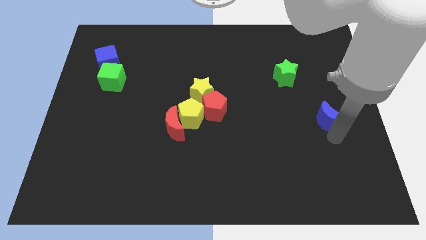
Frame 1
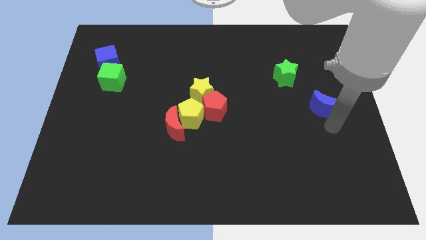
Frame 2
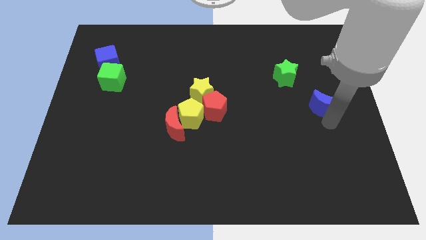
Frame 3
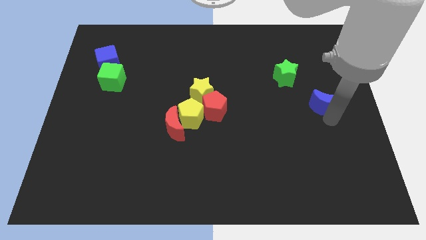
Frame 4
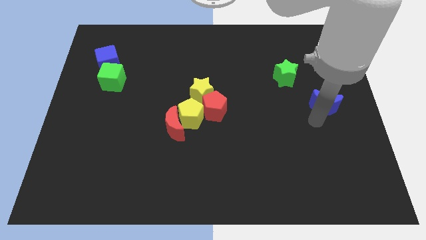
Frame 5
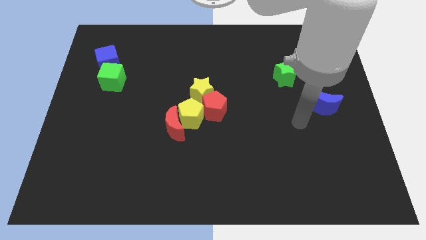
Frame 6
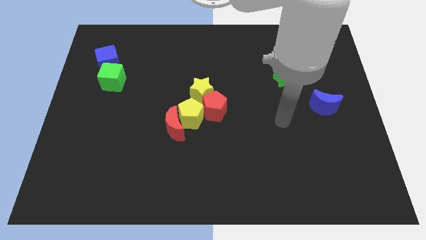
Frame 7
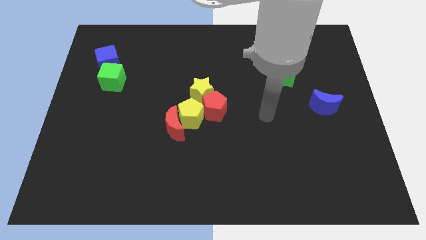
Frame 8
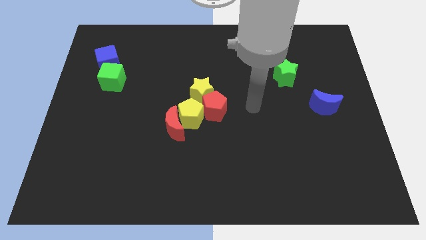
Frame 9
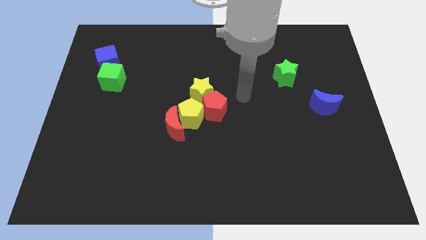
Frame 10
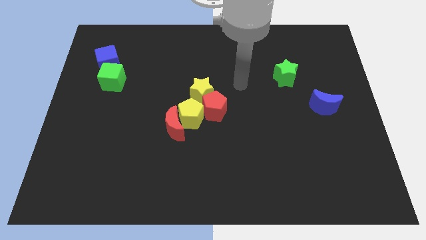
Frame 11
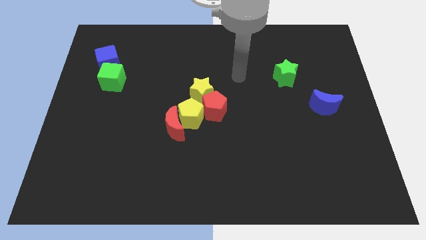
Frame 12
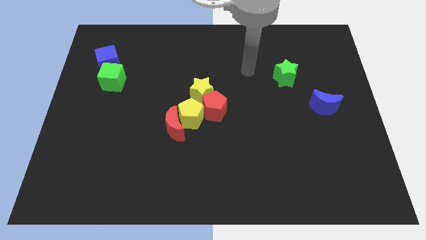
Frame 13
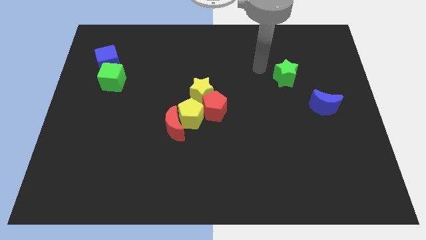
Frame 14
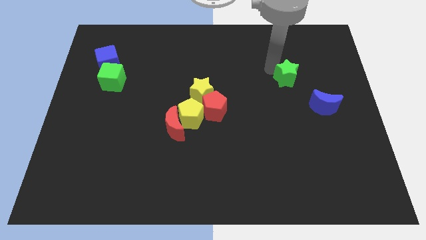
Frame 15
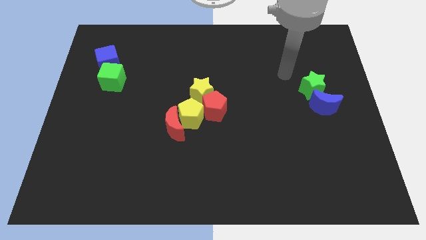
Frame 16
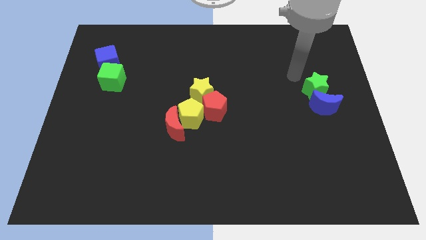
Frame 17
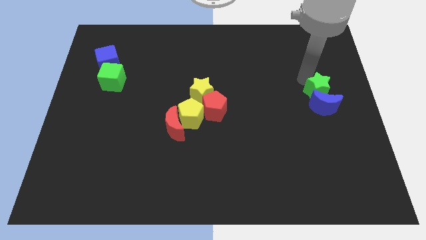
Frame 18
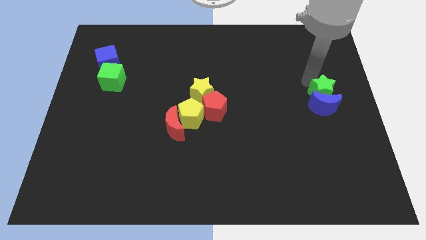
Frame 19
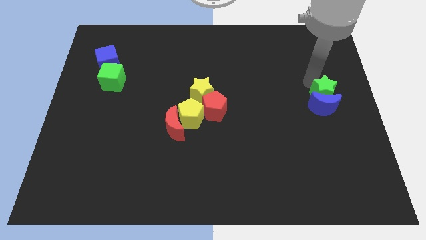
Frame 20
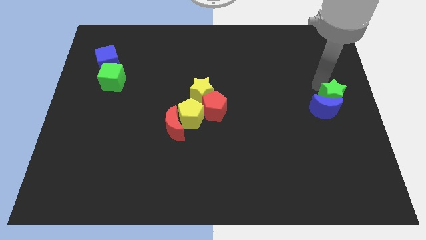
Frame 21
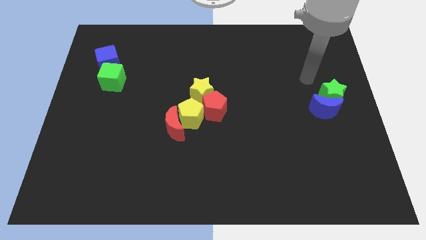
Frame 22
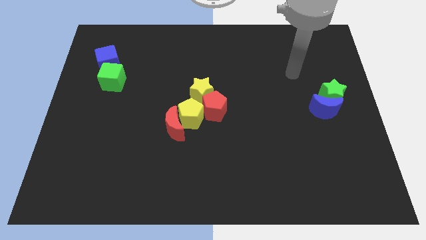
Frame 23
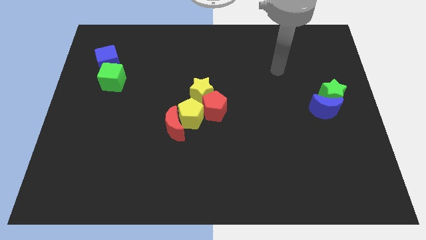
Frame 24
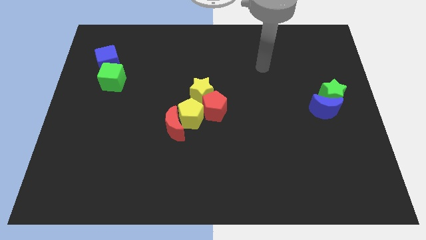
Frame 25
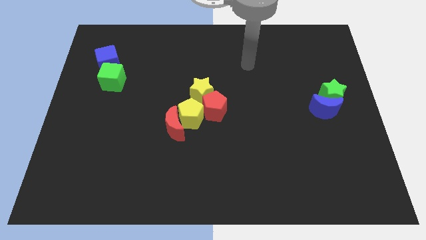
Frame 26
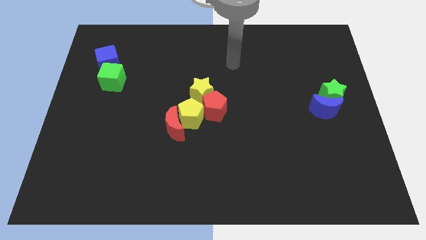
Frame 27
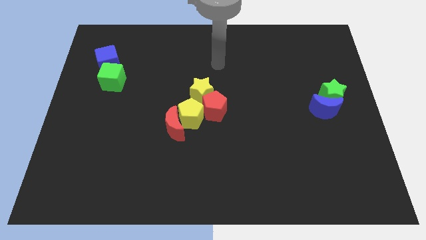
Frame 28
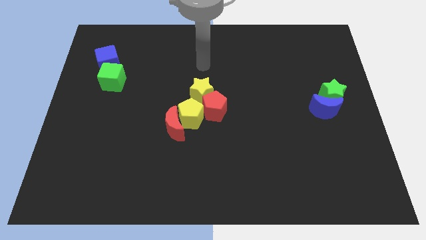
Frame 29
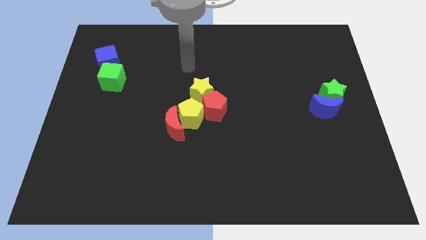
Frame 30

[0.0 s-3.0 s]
move the green star to the top of the blue crescent

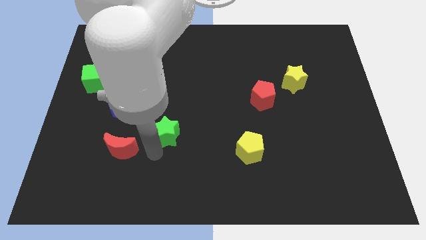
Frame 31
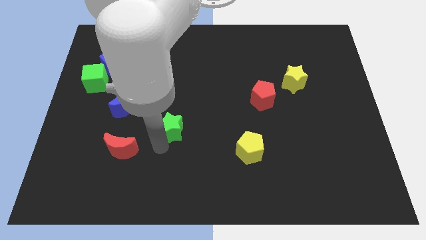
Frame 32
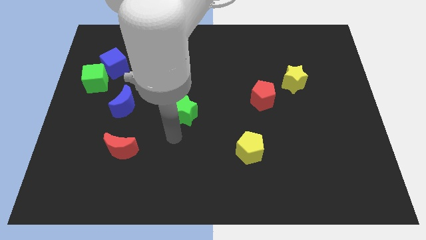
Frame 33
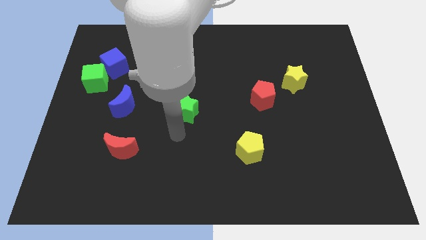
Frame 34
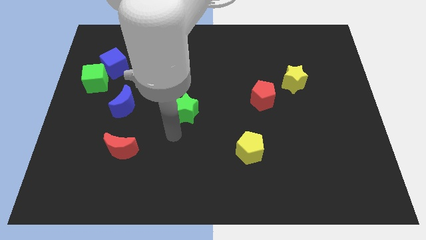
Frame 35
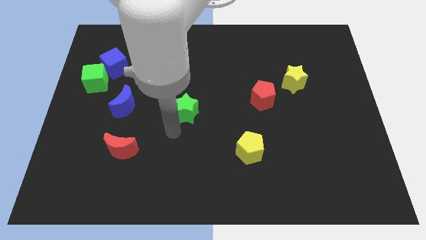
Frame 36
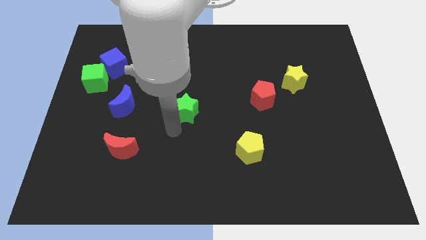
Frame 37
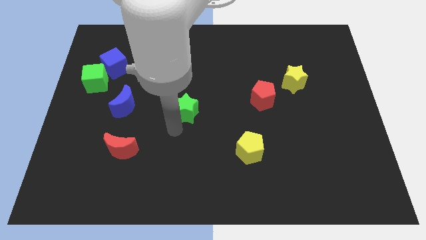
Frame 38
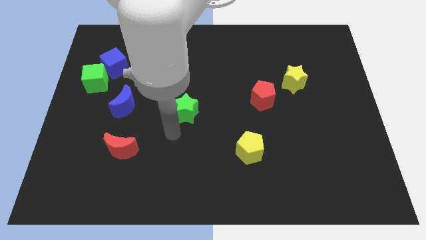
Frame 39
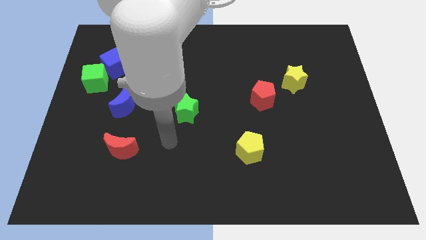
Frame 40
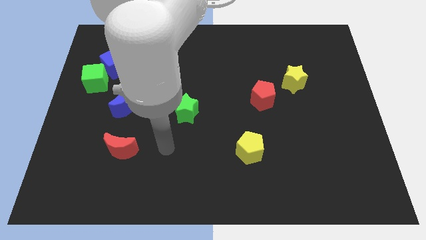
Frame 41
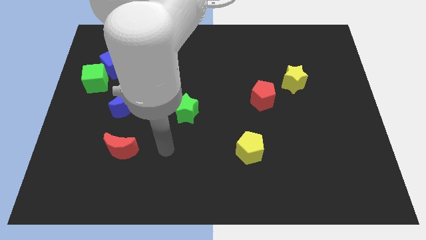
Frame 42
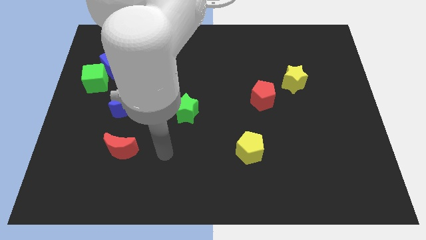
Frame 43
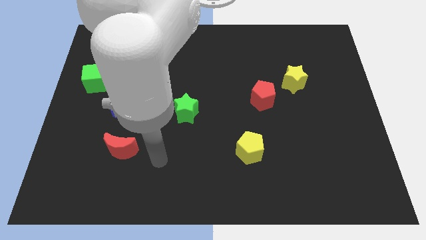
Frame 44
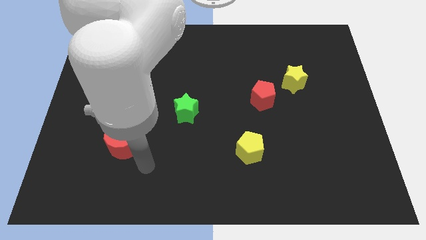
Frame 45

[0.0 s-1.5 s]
slide the green star parallel right side of the blue moon

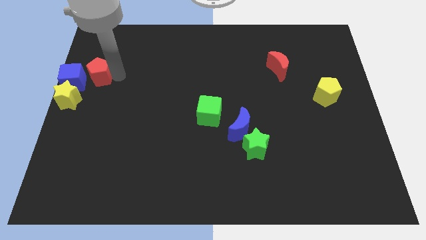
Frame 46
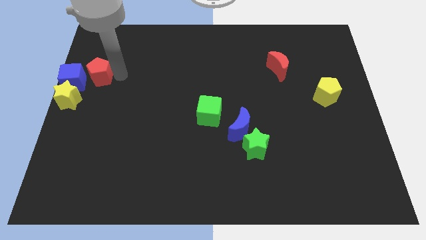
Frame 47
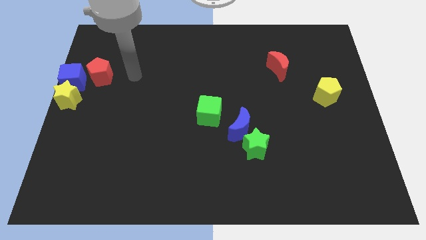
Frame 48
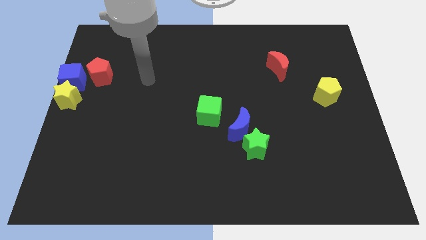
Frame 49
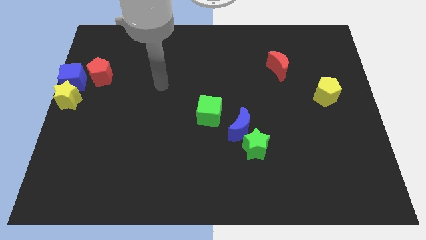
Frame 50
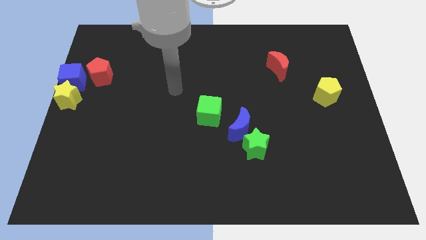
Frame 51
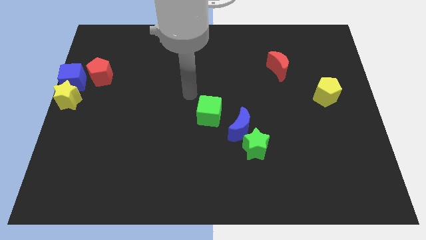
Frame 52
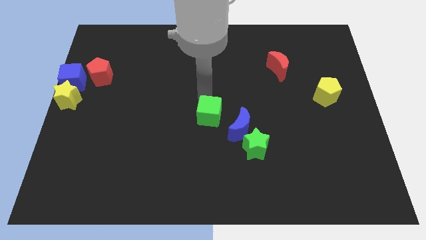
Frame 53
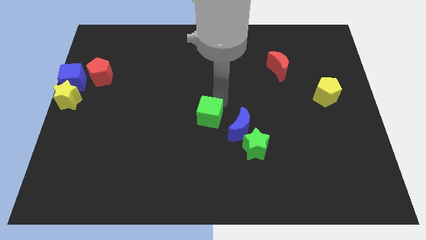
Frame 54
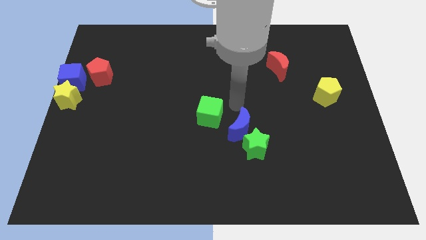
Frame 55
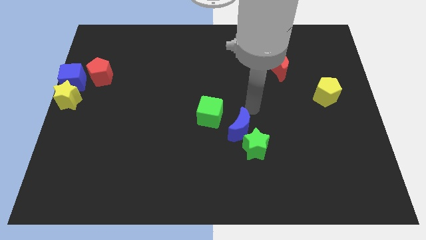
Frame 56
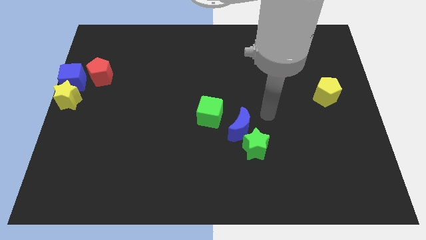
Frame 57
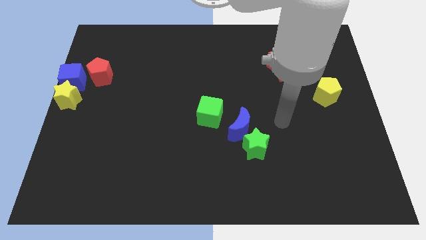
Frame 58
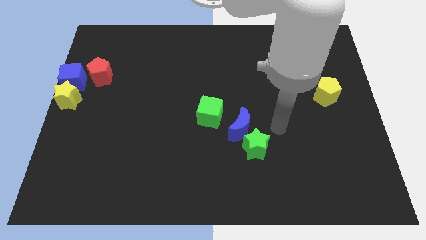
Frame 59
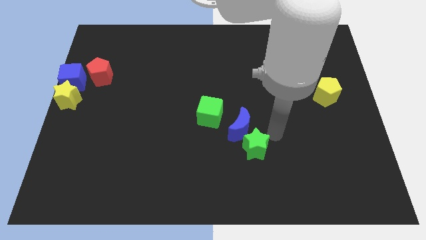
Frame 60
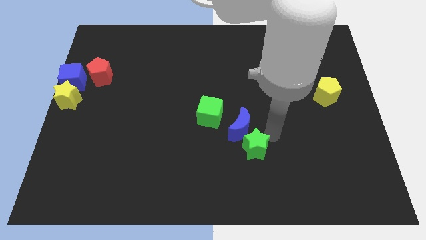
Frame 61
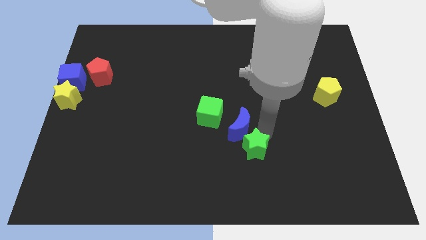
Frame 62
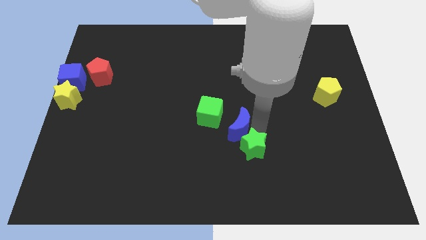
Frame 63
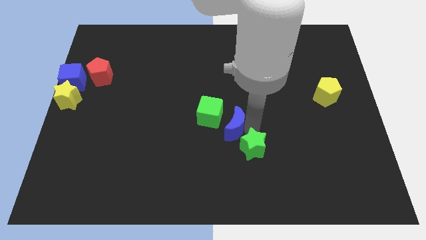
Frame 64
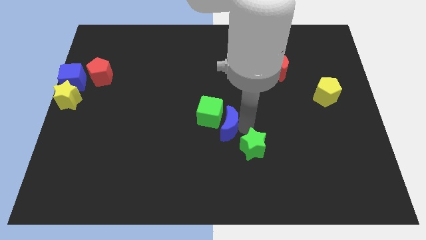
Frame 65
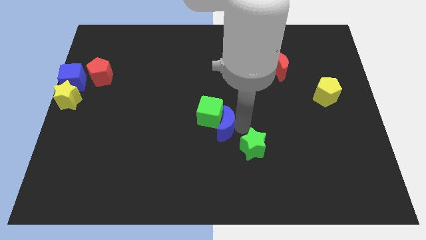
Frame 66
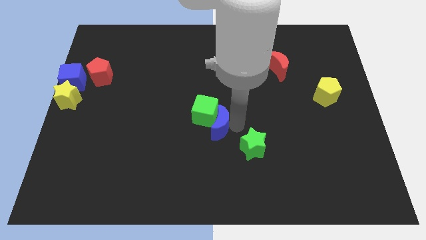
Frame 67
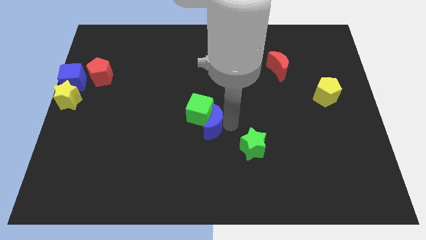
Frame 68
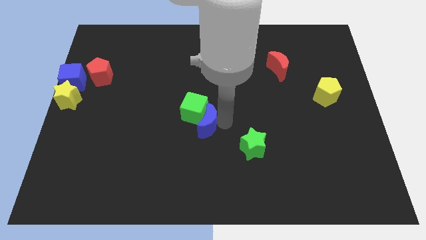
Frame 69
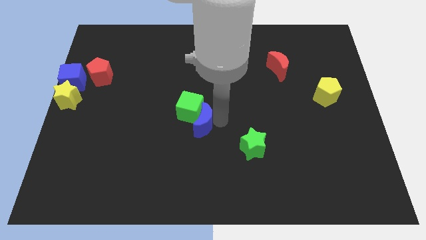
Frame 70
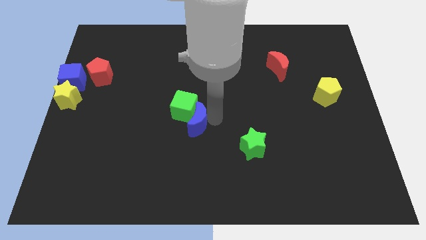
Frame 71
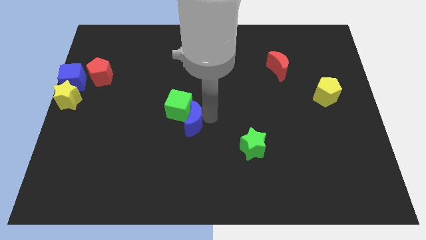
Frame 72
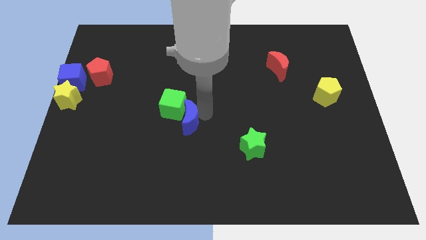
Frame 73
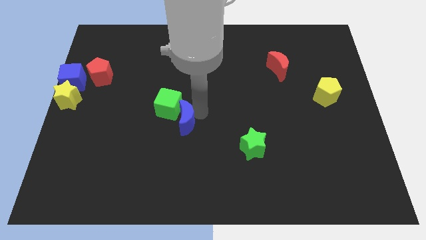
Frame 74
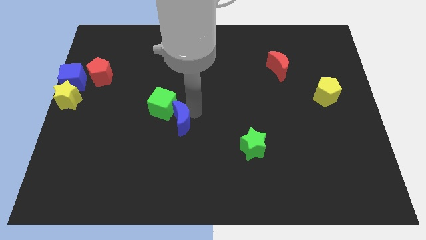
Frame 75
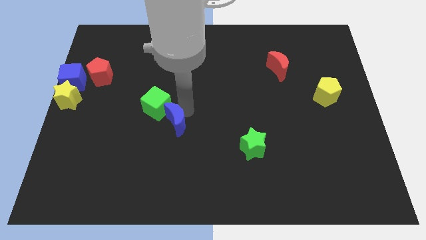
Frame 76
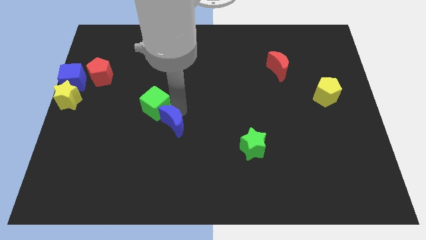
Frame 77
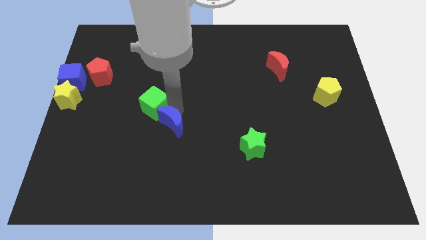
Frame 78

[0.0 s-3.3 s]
push the blue crescent and green cube to the left side of the board

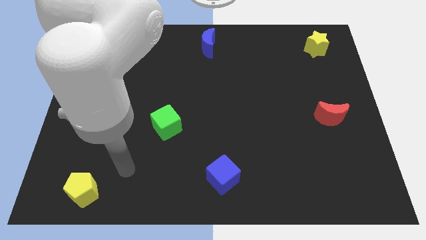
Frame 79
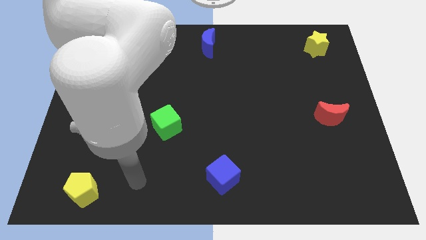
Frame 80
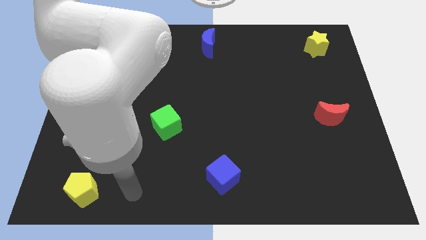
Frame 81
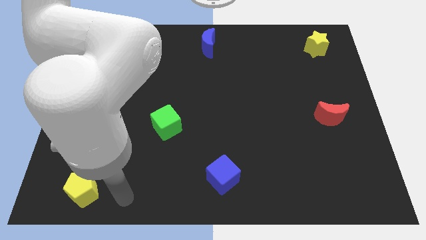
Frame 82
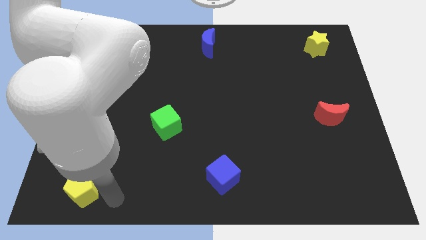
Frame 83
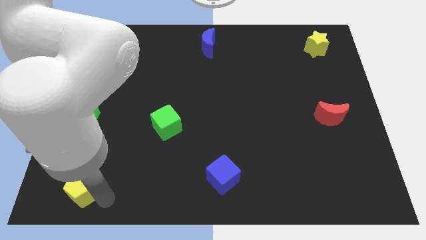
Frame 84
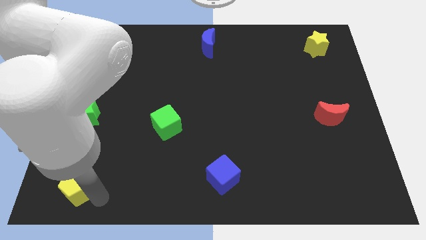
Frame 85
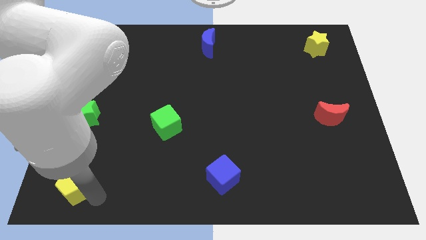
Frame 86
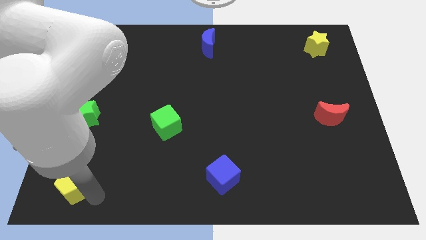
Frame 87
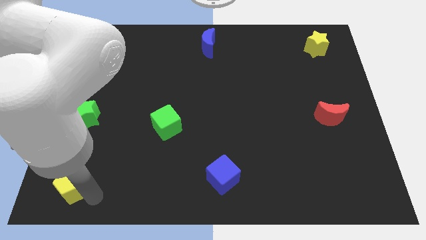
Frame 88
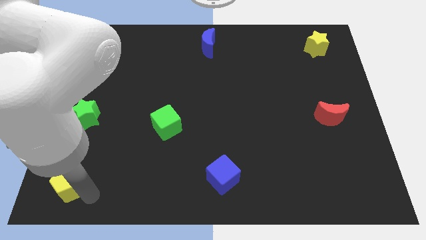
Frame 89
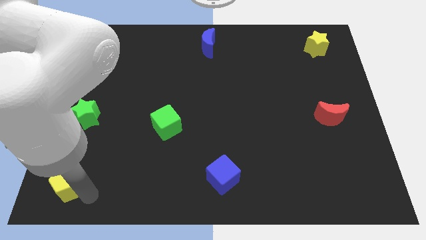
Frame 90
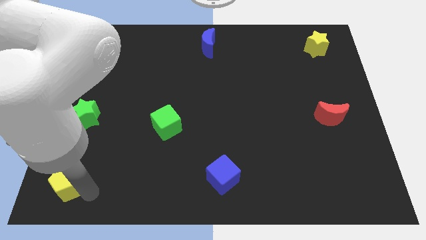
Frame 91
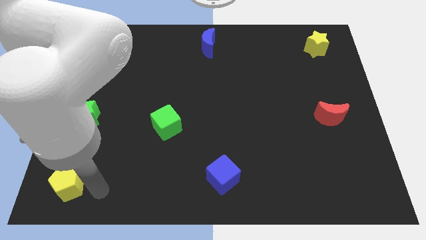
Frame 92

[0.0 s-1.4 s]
place the yellow pentagon on the bottom left corner of the board
